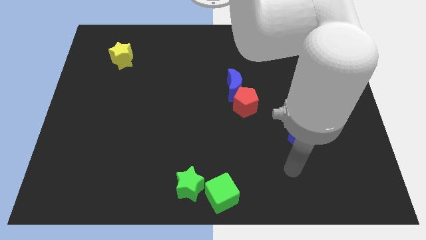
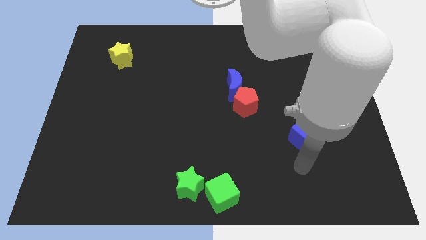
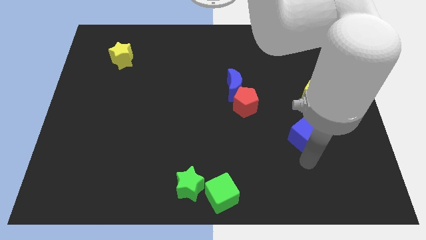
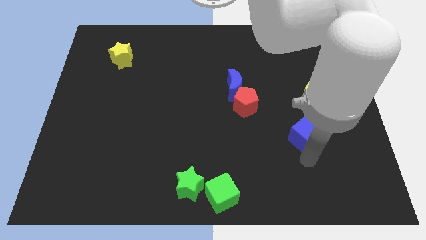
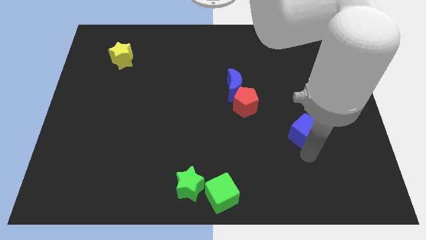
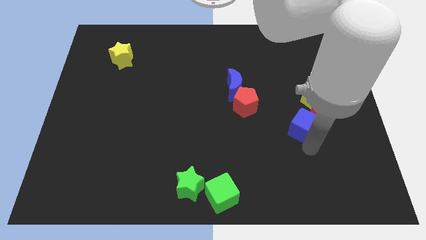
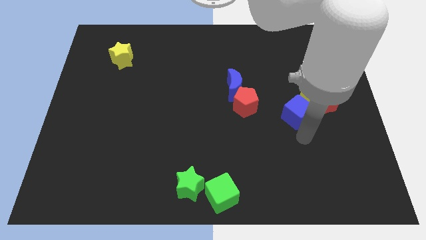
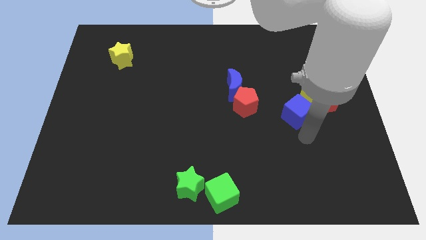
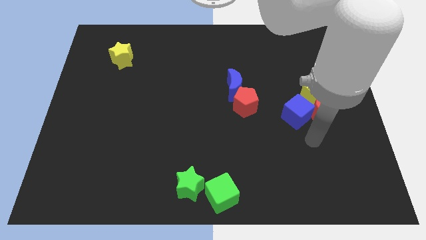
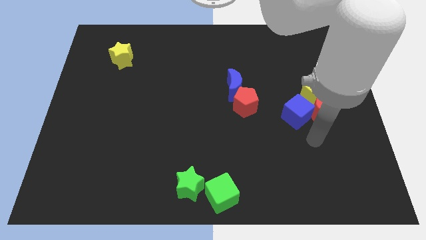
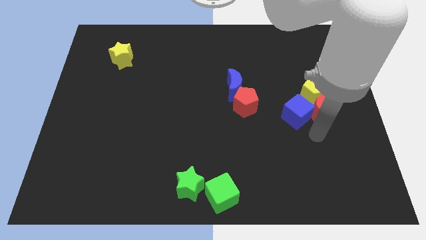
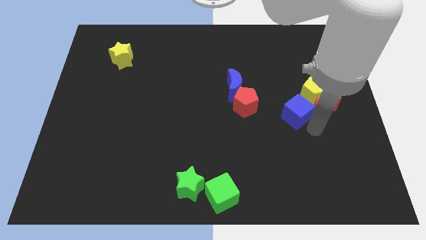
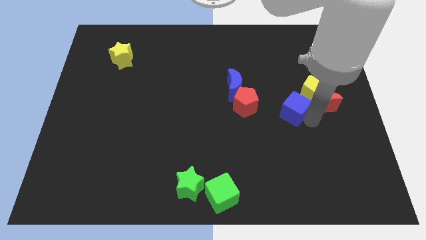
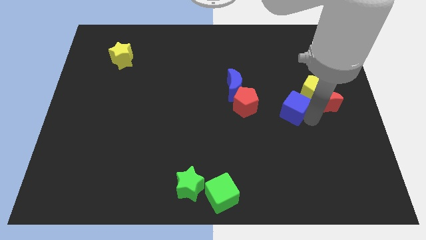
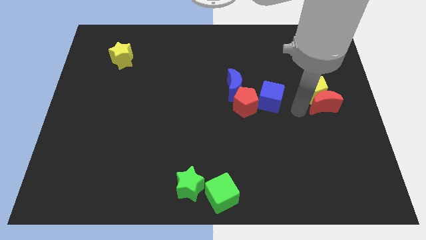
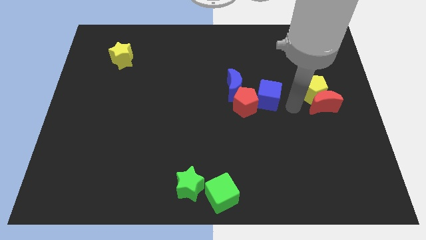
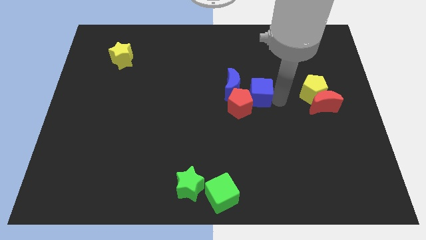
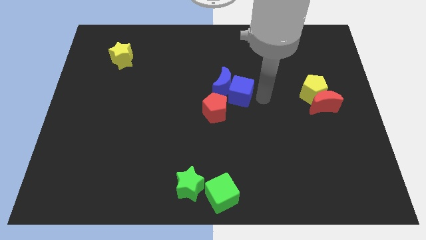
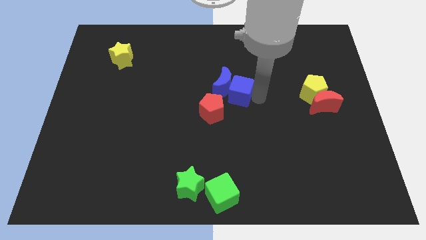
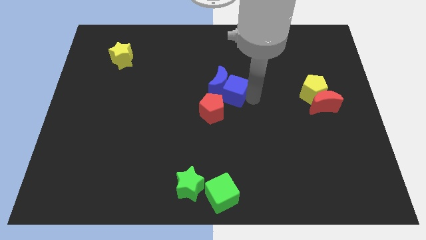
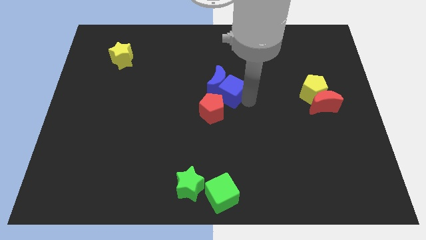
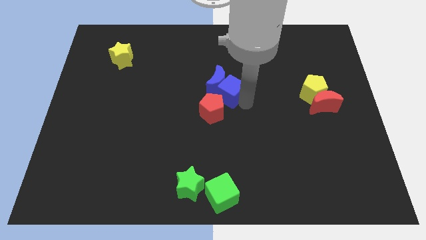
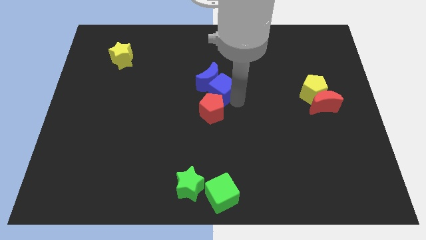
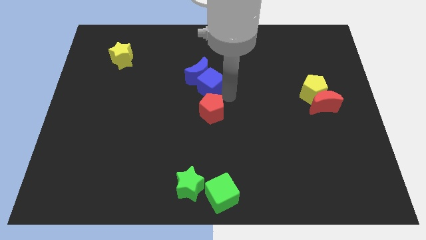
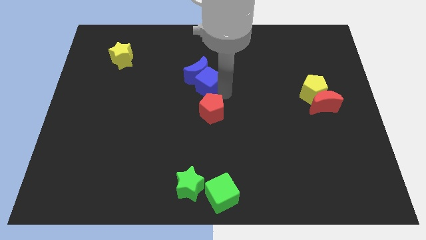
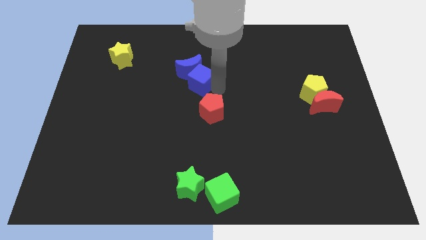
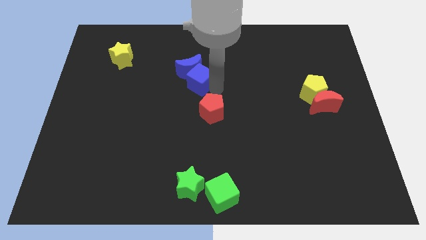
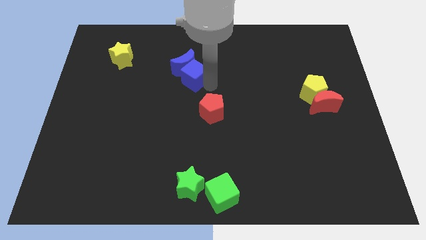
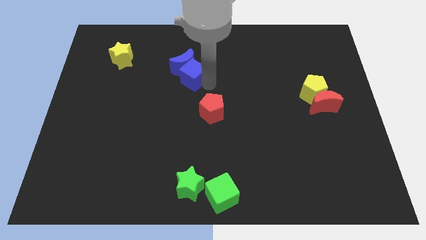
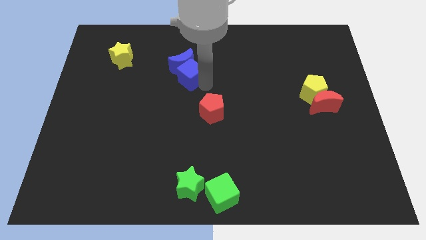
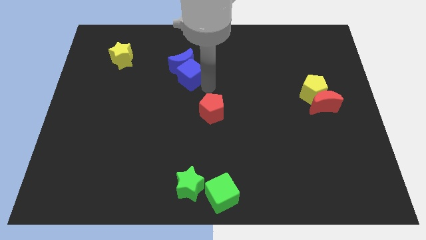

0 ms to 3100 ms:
move the group of blue blocks towards the top left

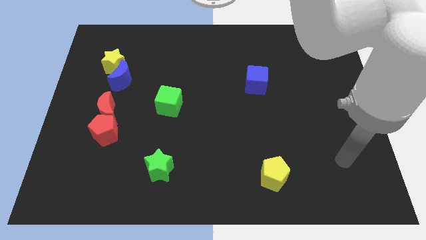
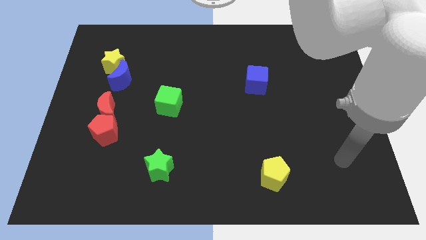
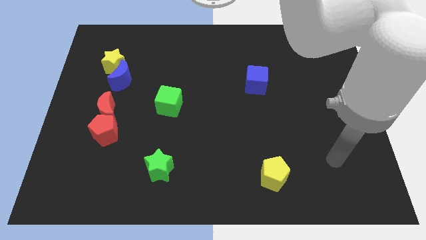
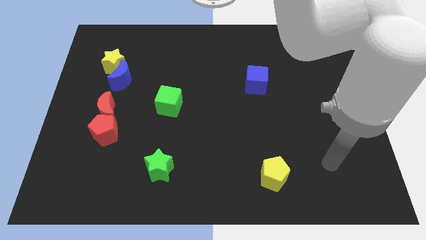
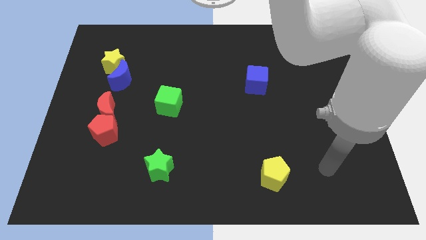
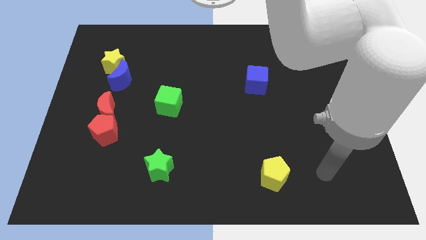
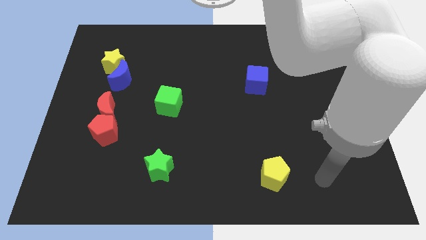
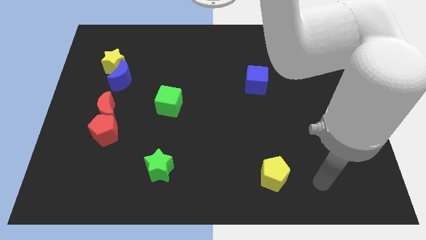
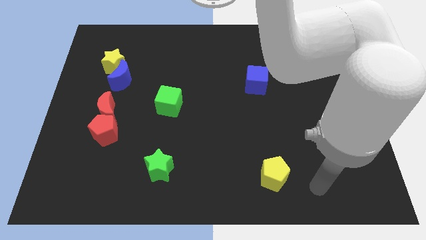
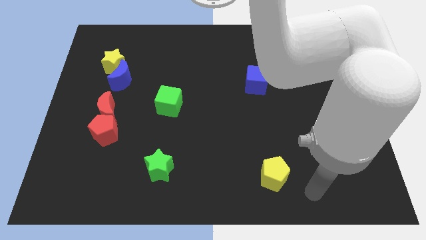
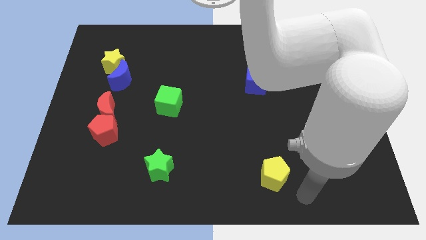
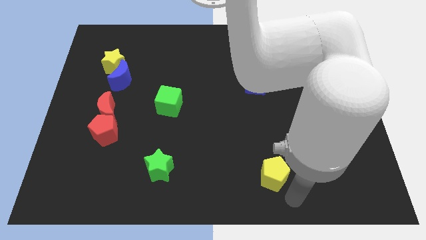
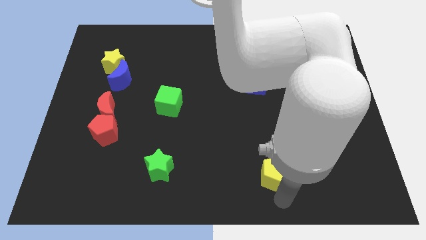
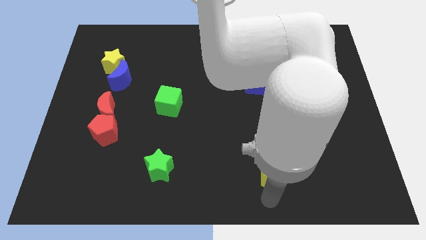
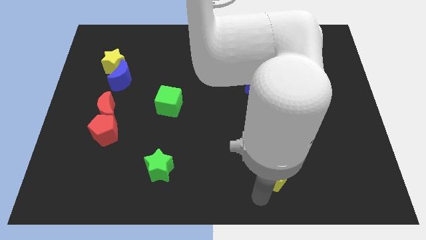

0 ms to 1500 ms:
place your arm to the bottom of the yellow pentagon

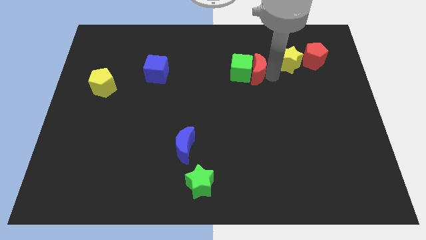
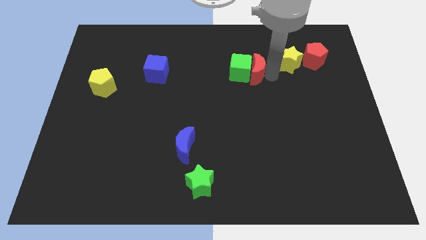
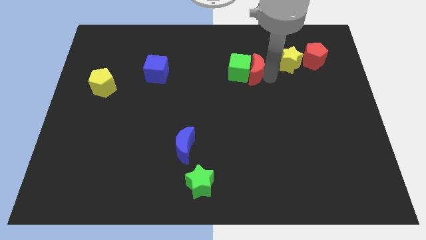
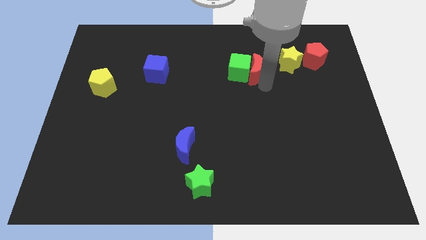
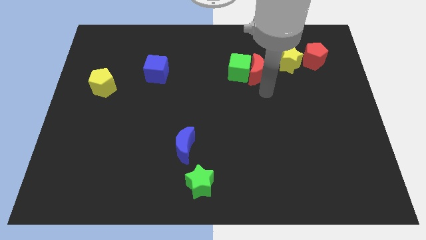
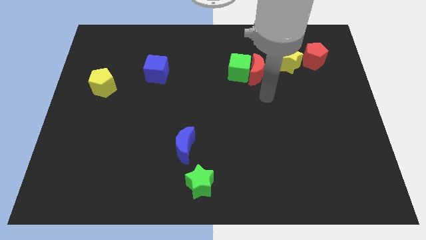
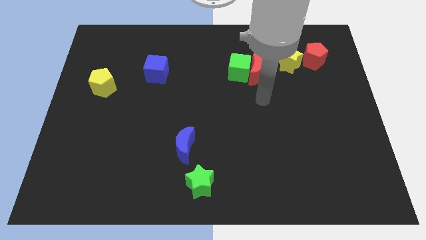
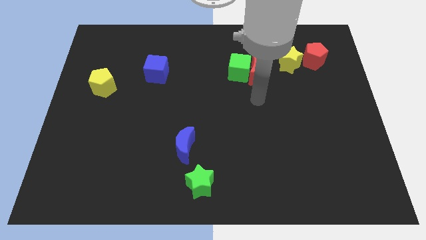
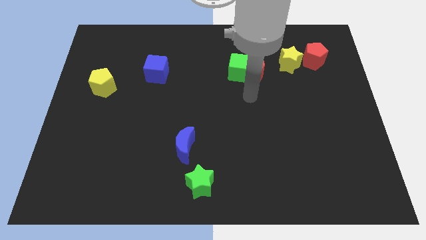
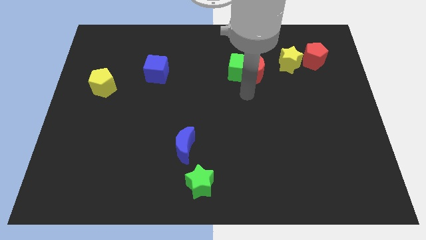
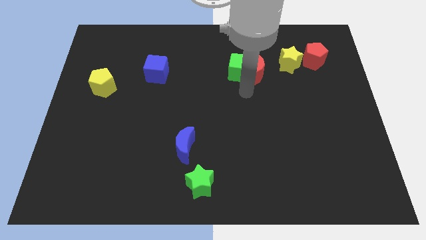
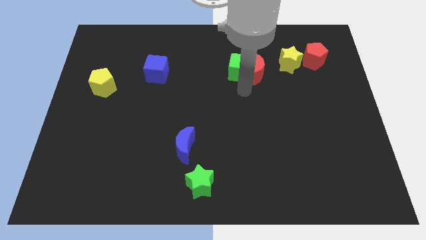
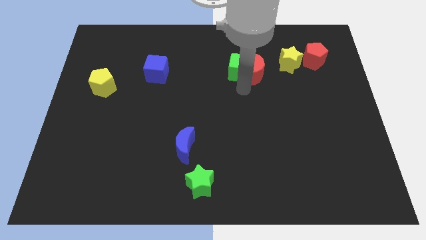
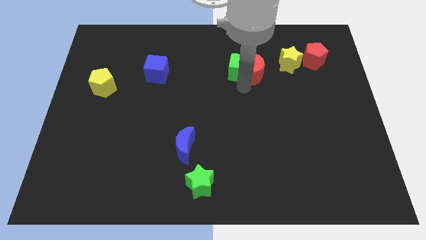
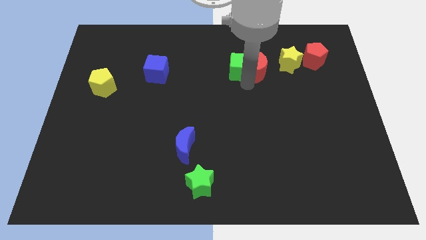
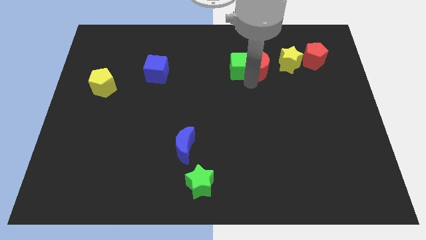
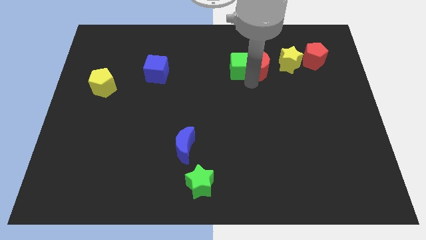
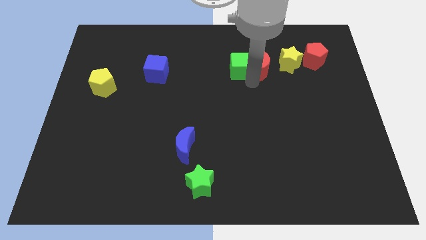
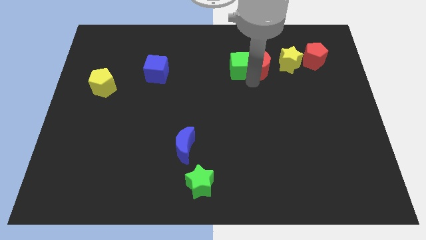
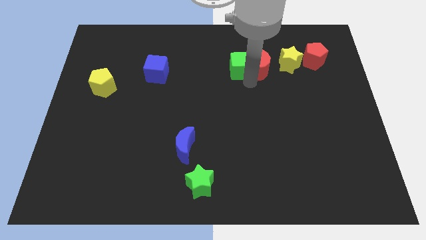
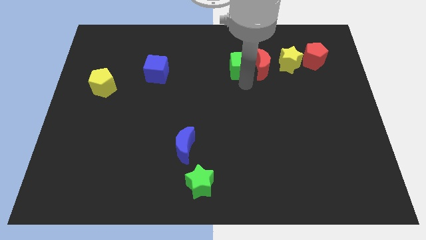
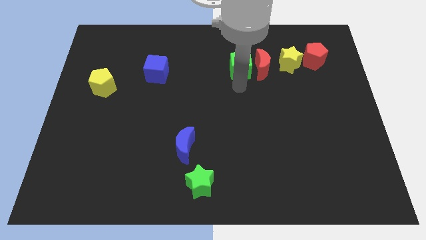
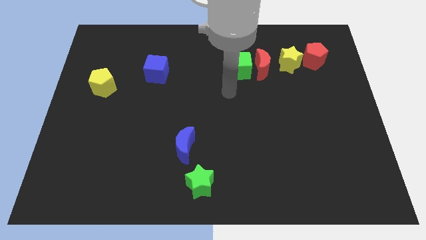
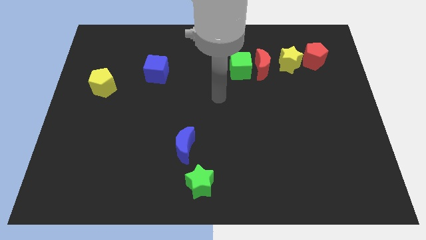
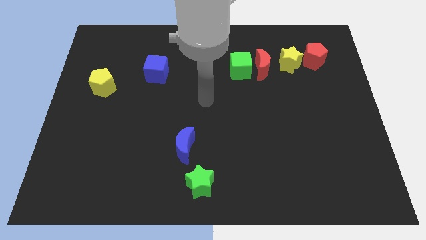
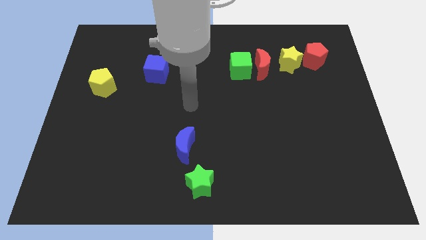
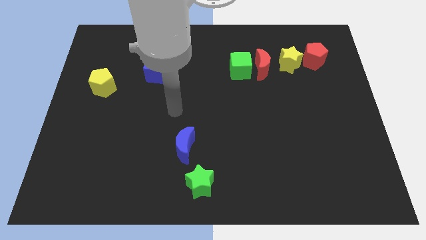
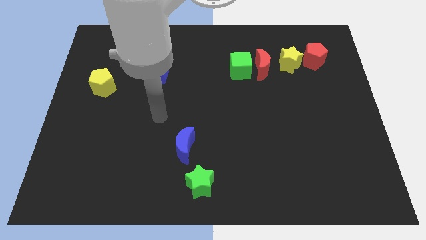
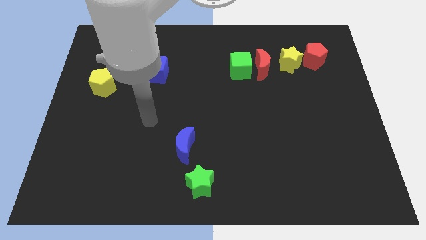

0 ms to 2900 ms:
separate red moon and green cube

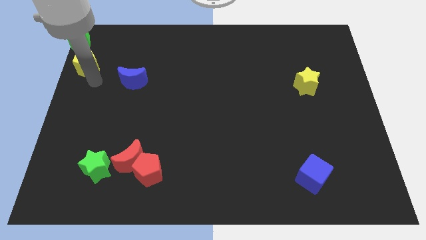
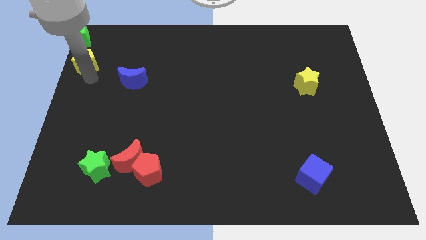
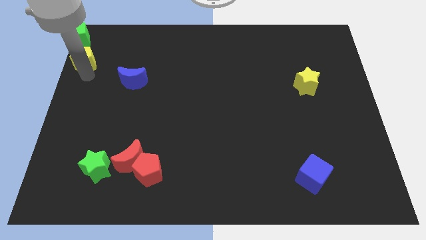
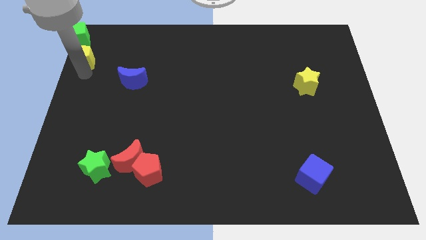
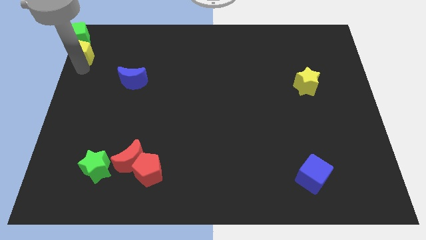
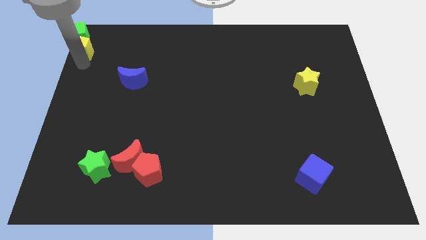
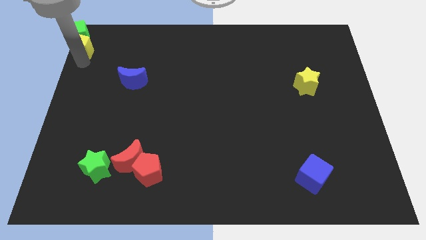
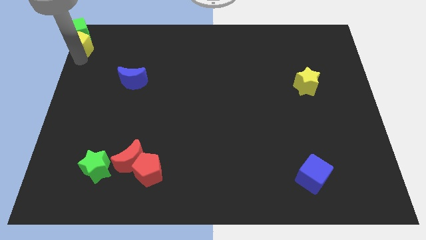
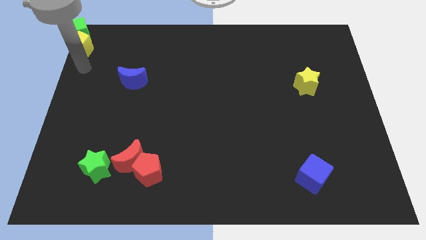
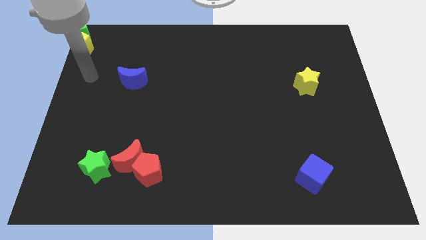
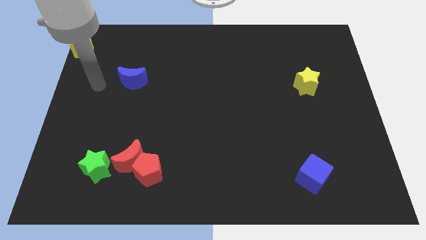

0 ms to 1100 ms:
move the yellow pentagon into the bottom side of the green cube

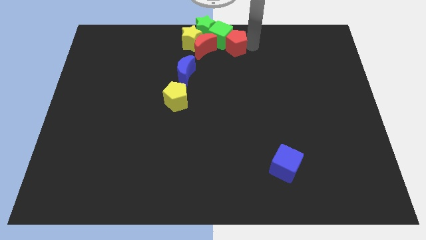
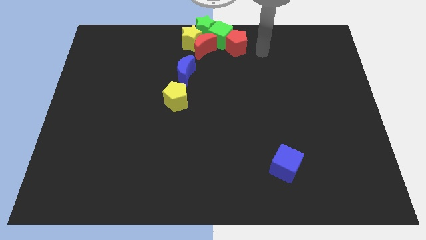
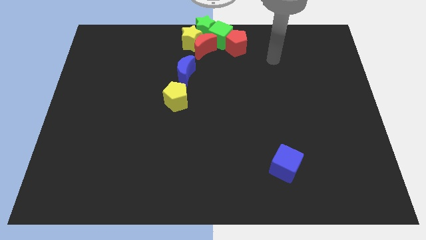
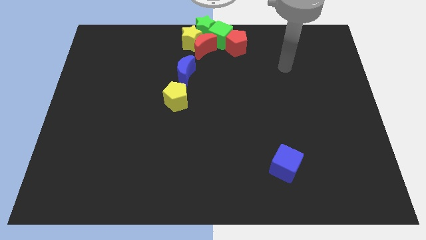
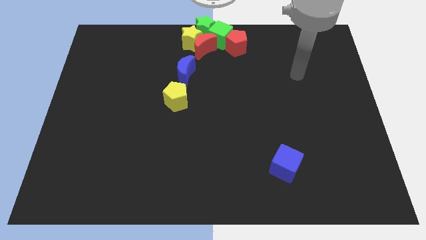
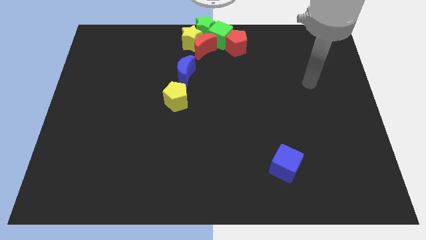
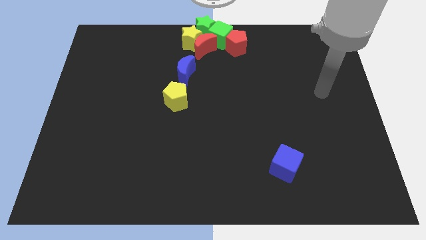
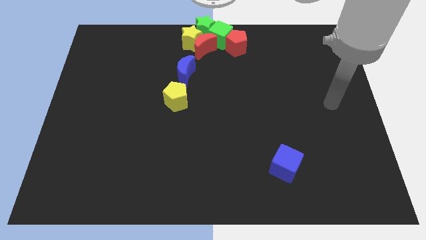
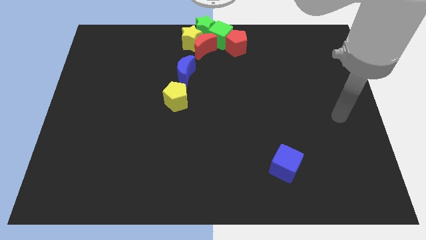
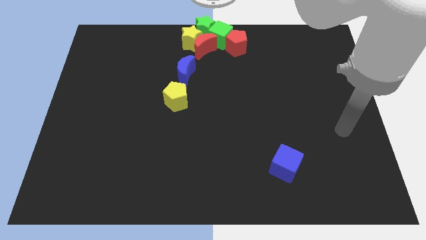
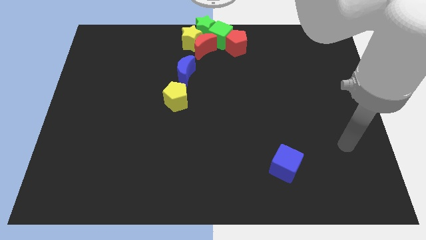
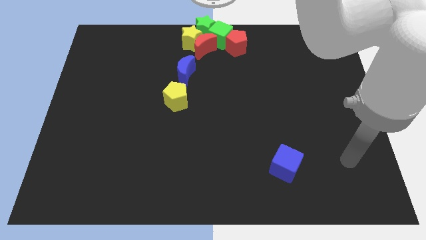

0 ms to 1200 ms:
move your arm away from red pentagon
